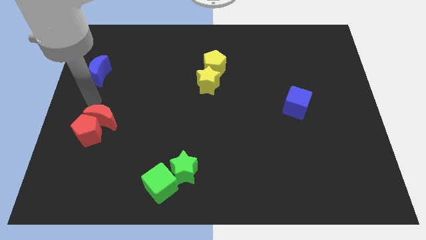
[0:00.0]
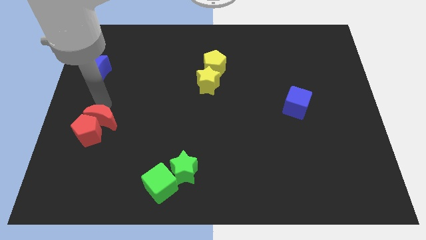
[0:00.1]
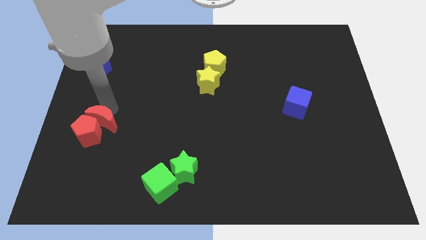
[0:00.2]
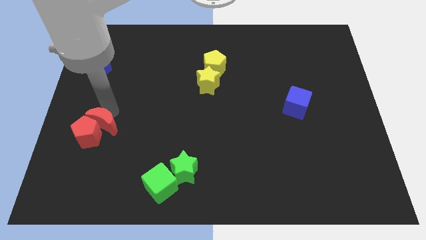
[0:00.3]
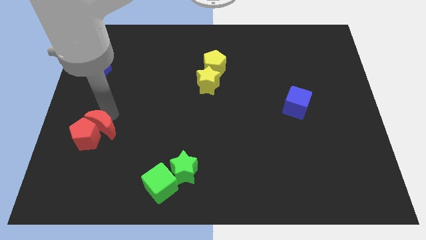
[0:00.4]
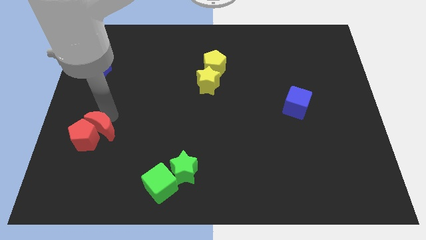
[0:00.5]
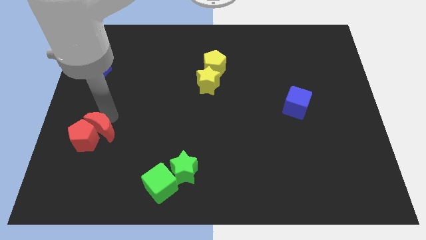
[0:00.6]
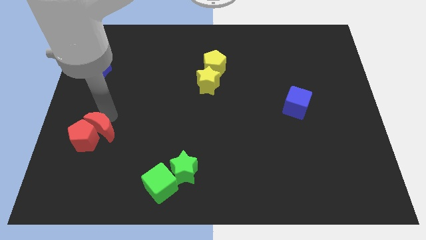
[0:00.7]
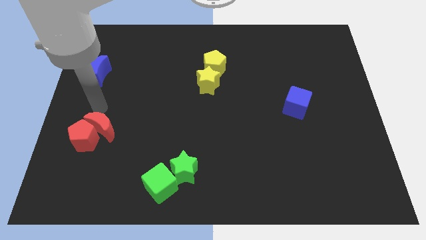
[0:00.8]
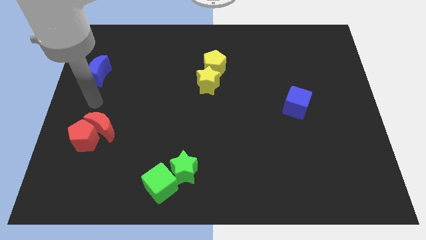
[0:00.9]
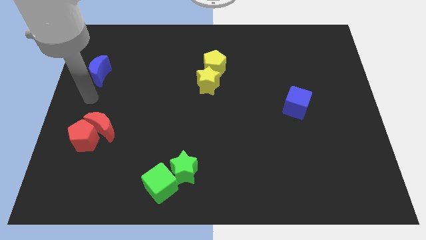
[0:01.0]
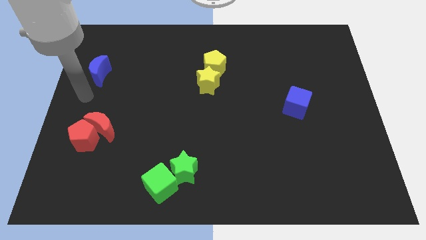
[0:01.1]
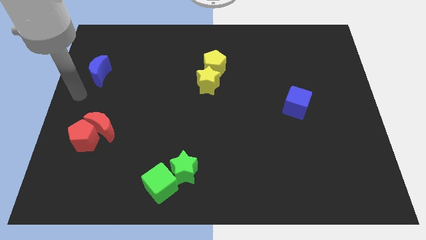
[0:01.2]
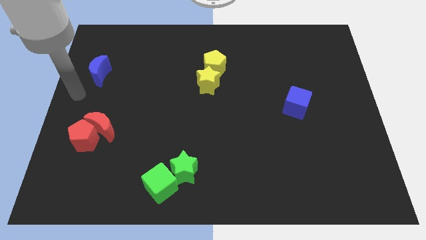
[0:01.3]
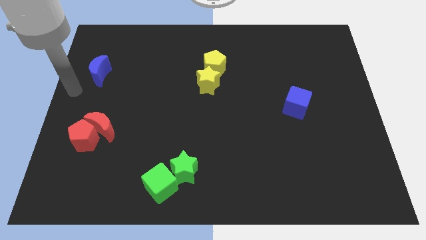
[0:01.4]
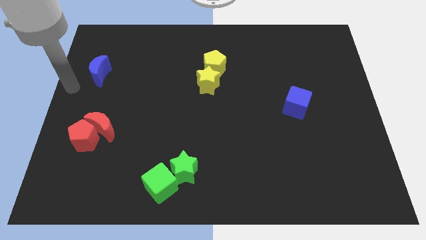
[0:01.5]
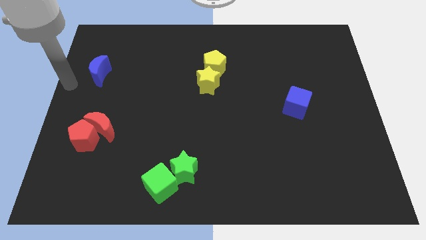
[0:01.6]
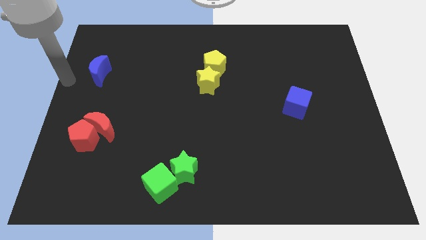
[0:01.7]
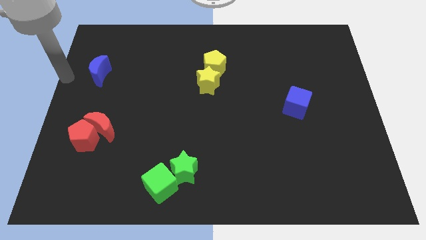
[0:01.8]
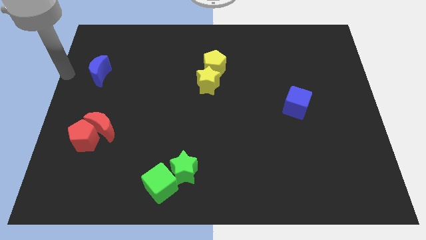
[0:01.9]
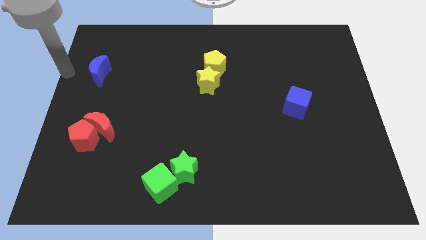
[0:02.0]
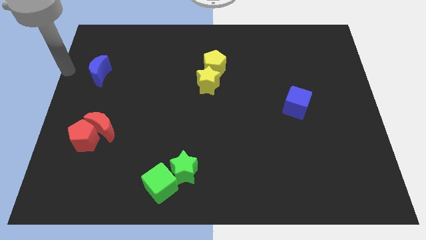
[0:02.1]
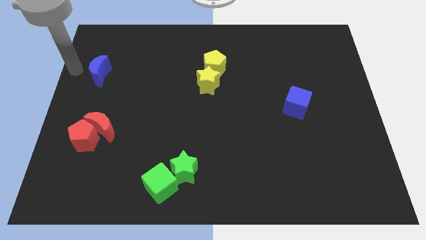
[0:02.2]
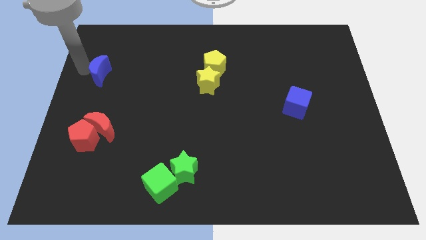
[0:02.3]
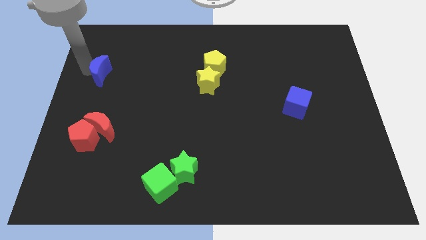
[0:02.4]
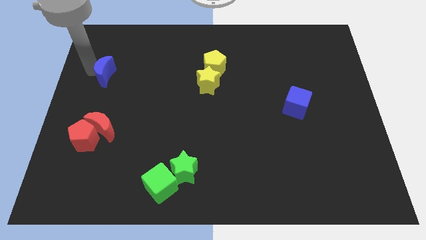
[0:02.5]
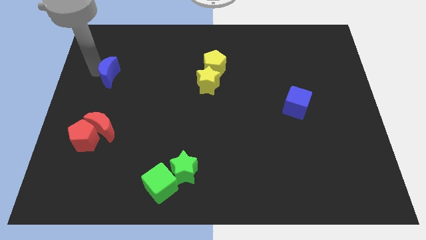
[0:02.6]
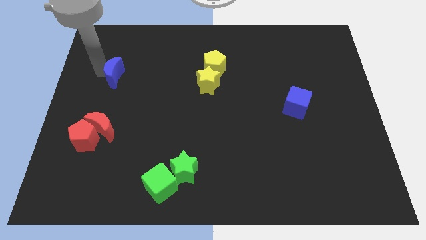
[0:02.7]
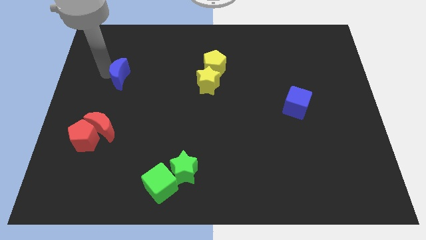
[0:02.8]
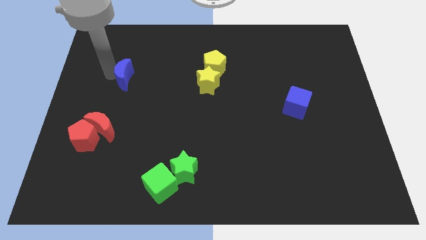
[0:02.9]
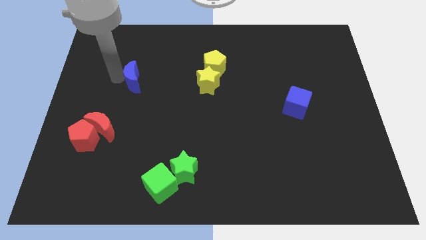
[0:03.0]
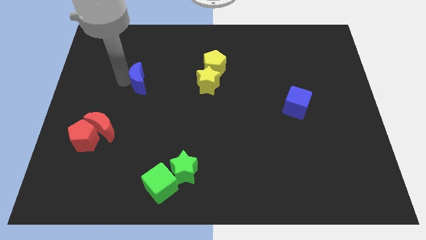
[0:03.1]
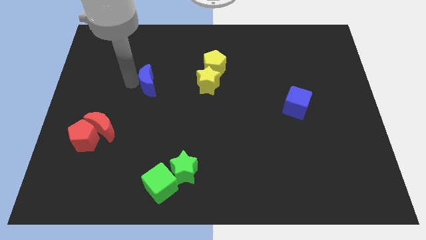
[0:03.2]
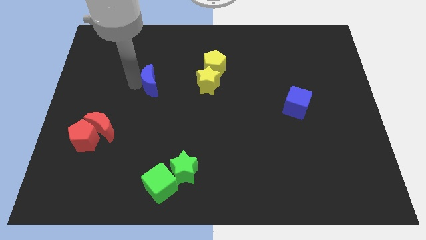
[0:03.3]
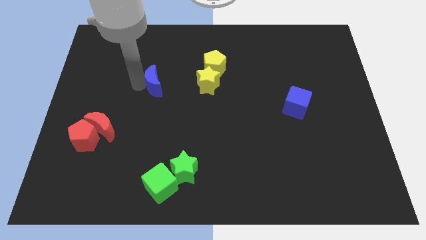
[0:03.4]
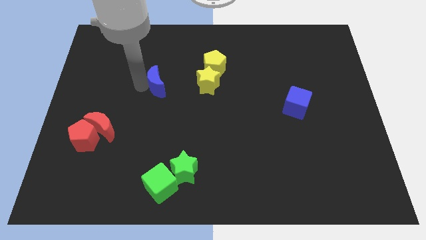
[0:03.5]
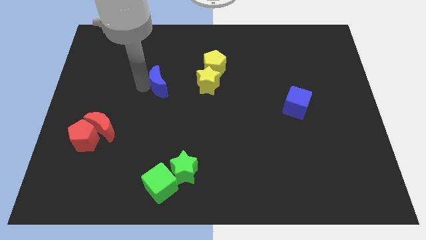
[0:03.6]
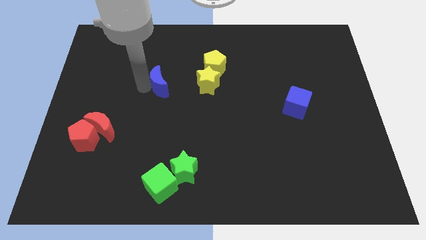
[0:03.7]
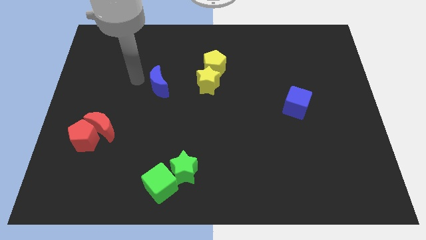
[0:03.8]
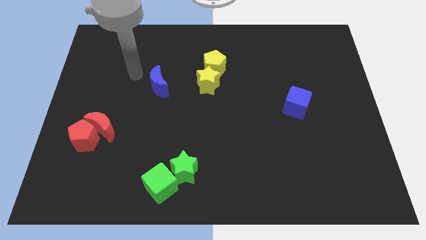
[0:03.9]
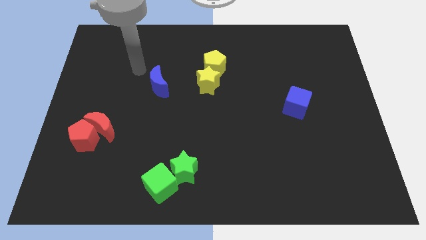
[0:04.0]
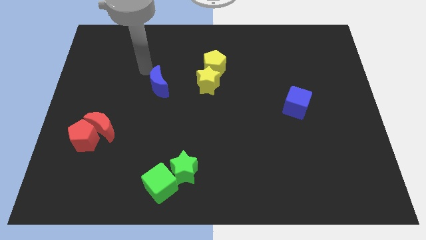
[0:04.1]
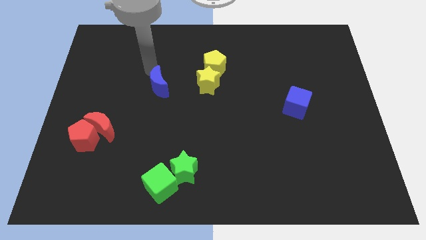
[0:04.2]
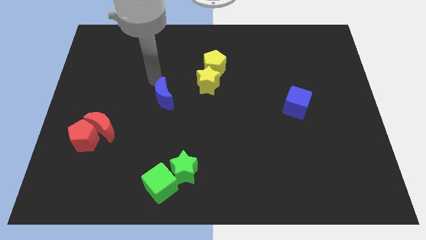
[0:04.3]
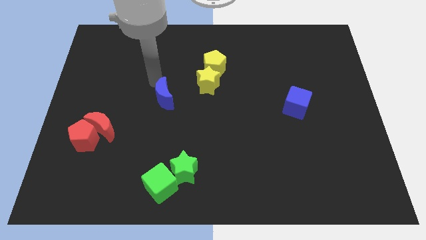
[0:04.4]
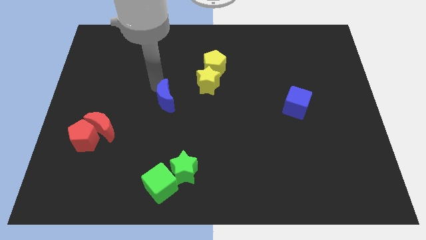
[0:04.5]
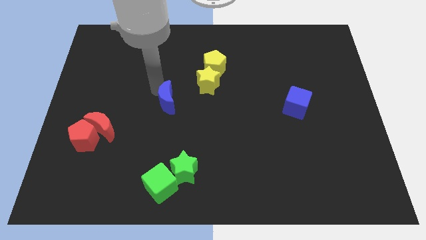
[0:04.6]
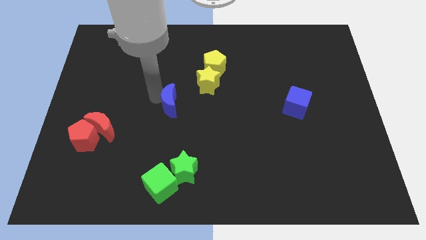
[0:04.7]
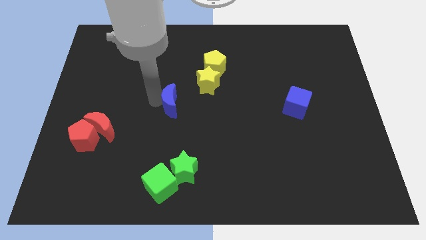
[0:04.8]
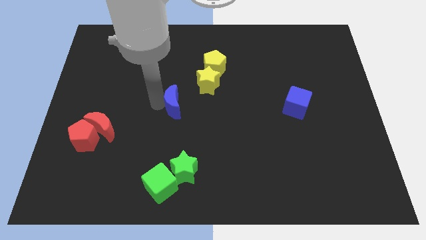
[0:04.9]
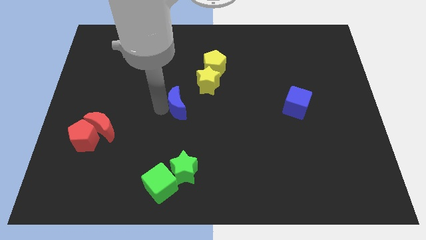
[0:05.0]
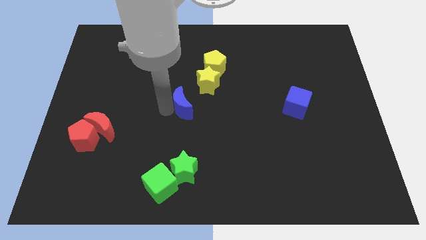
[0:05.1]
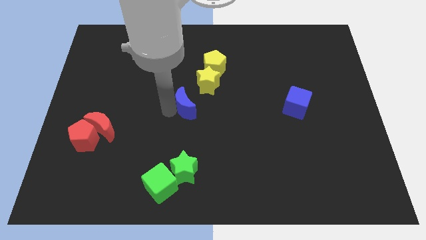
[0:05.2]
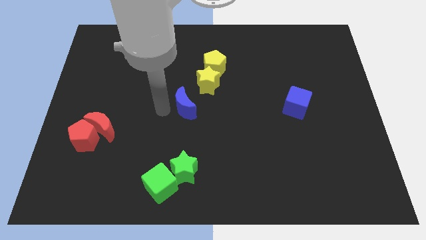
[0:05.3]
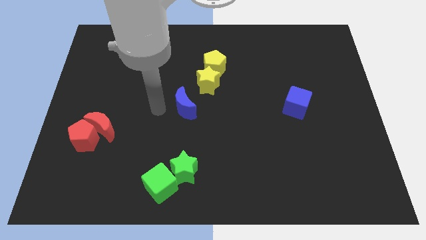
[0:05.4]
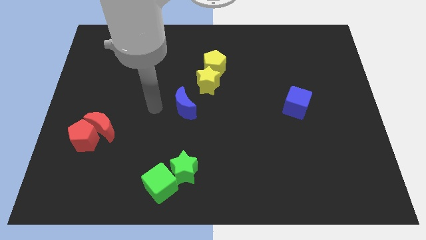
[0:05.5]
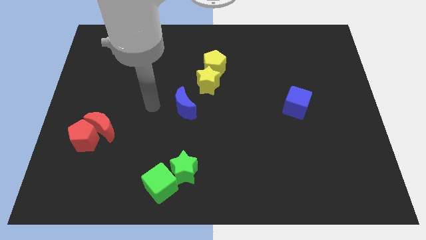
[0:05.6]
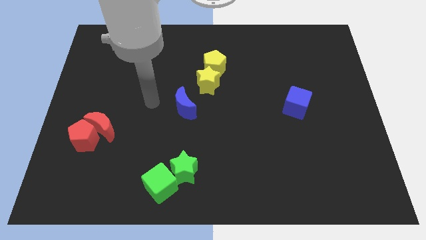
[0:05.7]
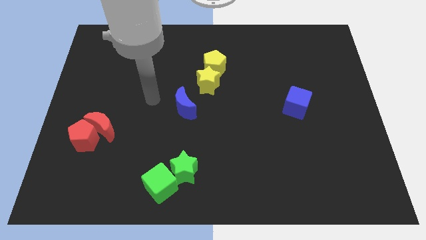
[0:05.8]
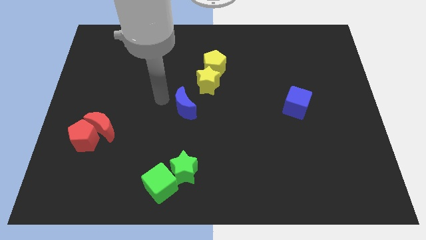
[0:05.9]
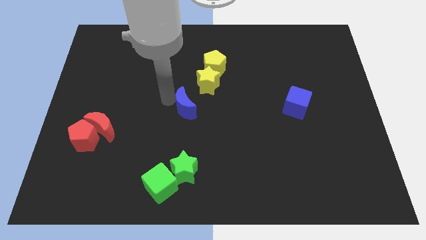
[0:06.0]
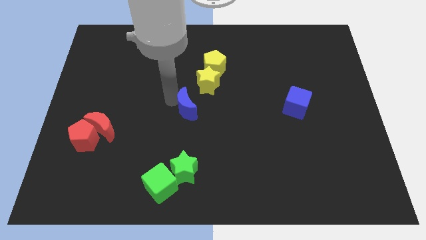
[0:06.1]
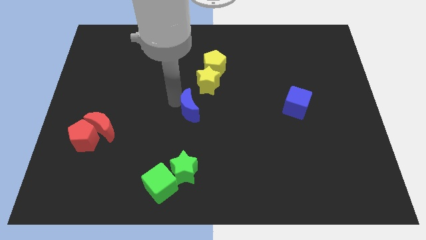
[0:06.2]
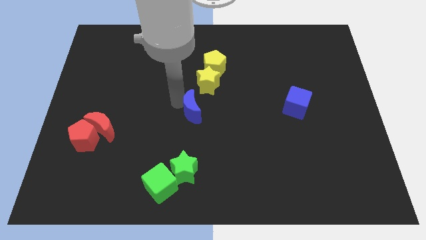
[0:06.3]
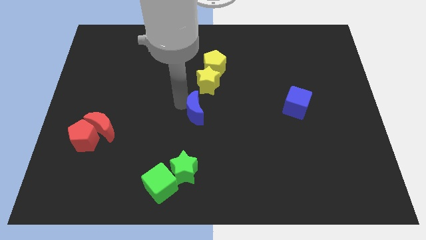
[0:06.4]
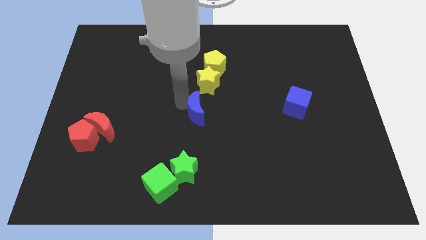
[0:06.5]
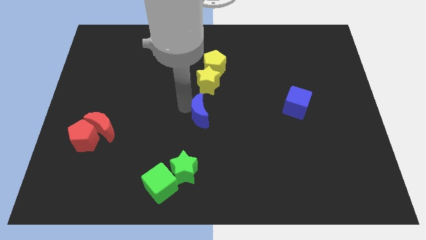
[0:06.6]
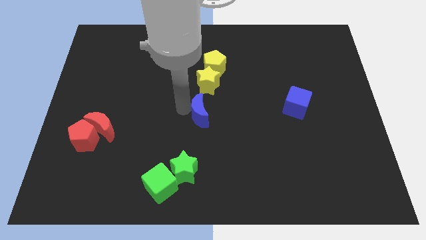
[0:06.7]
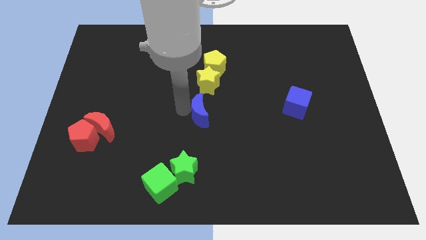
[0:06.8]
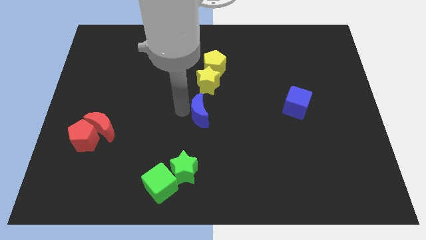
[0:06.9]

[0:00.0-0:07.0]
place the blue crescent to bottom of the yellow blocks

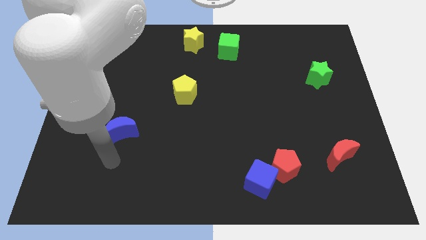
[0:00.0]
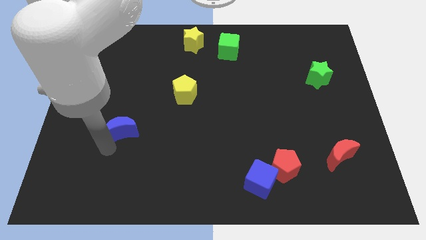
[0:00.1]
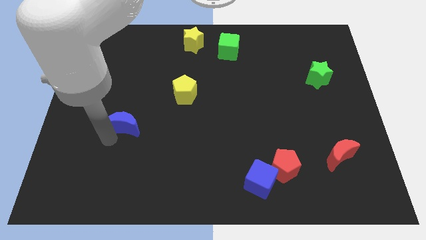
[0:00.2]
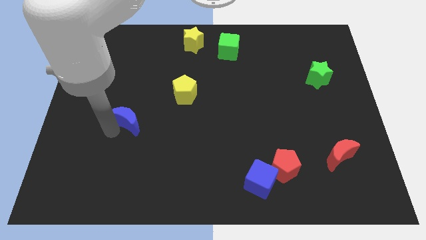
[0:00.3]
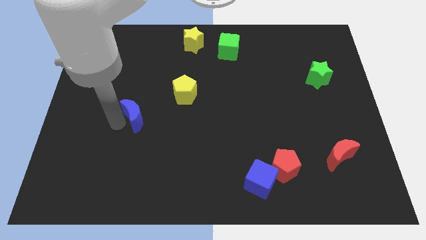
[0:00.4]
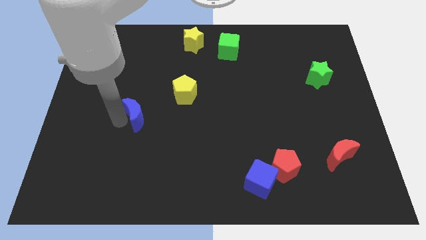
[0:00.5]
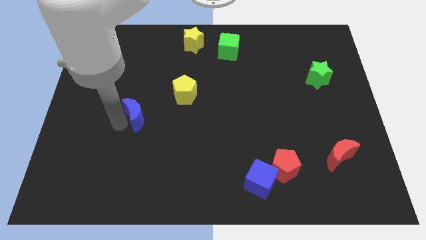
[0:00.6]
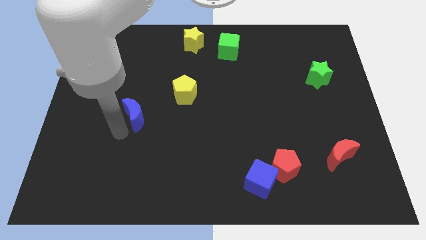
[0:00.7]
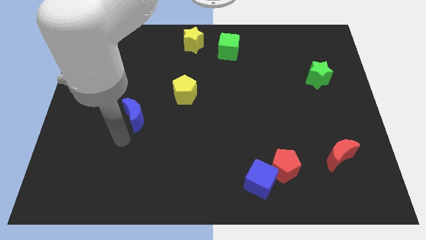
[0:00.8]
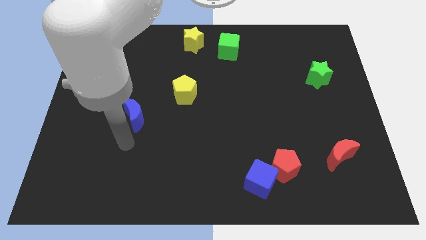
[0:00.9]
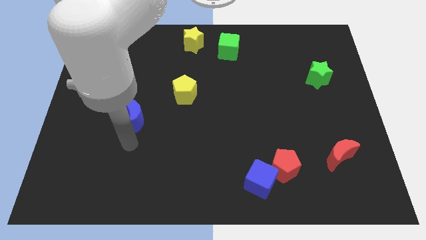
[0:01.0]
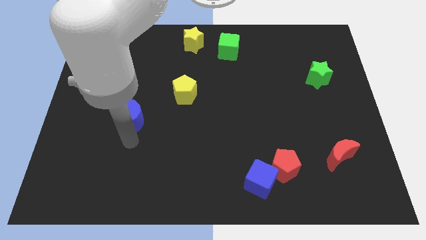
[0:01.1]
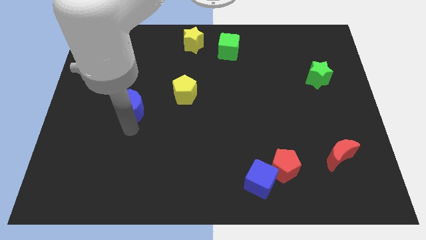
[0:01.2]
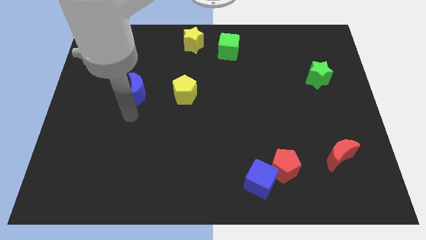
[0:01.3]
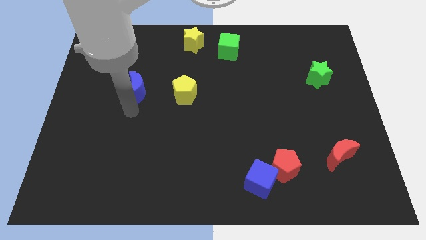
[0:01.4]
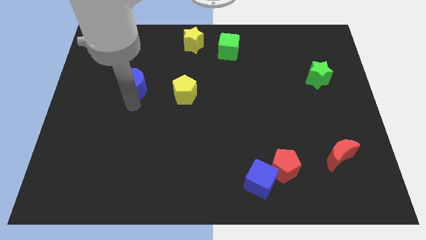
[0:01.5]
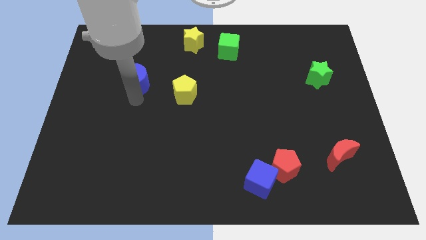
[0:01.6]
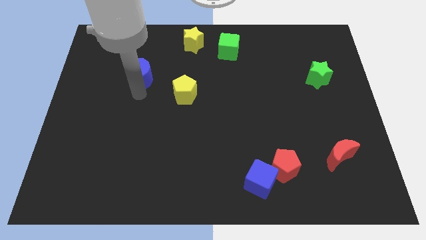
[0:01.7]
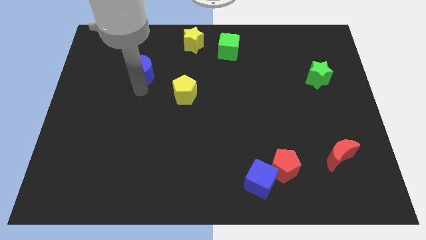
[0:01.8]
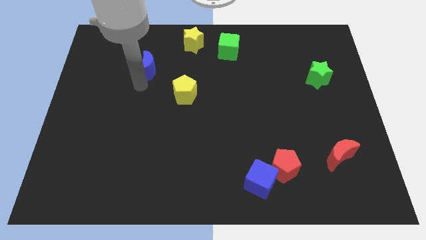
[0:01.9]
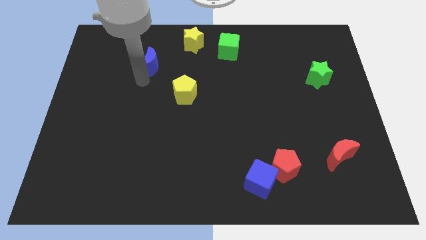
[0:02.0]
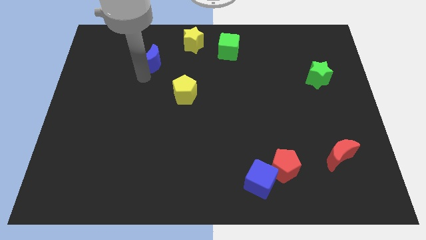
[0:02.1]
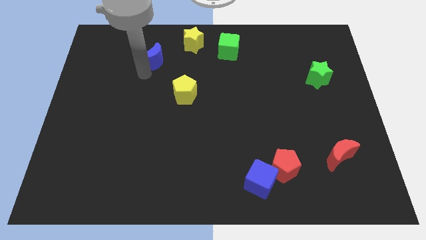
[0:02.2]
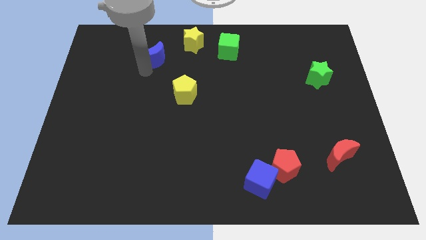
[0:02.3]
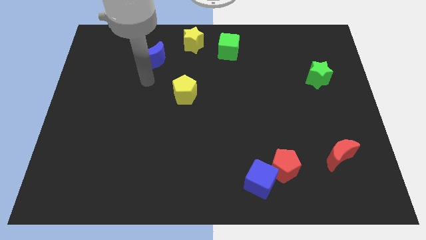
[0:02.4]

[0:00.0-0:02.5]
place the blue moon diagonally to the yellow pentagon
